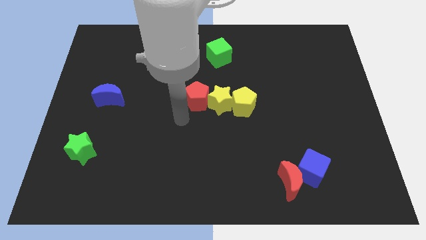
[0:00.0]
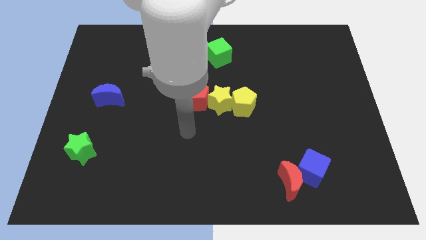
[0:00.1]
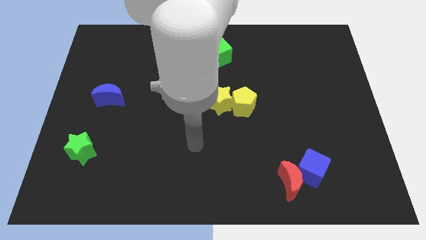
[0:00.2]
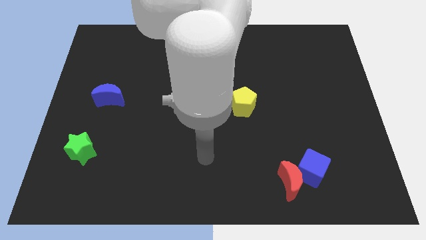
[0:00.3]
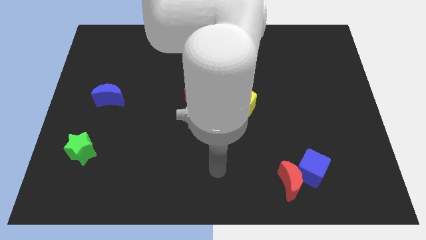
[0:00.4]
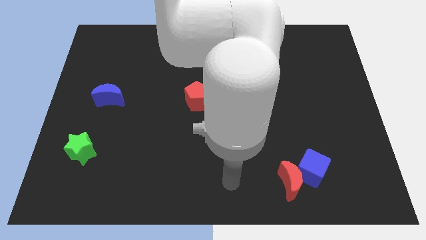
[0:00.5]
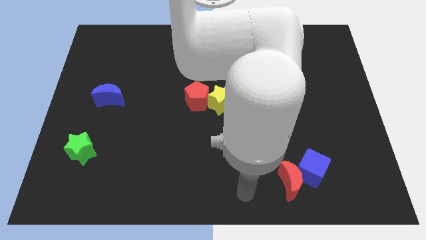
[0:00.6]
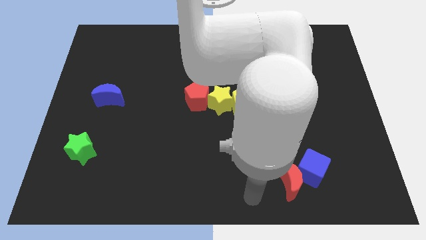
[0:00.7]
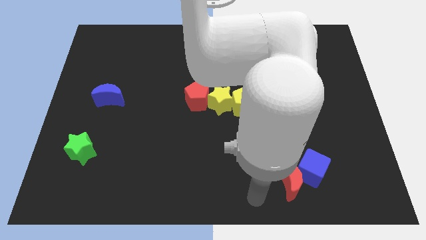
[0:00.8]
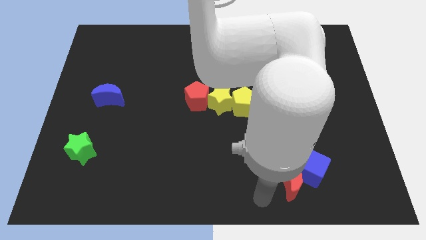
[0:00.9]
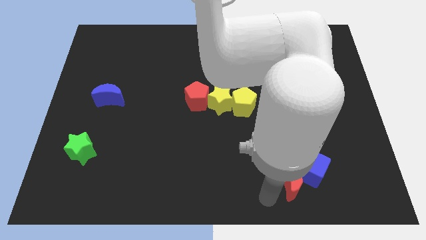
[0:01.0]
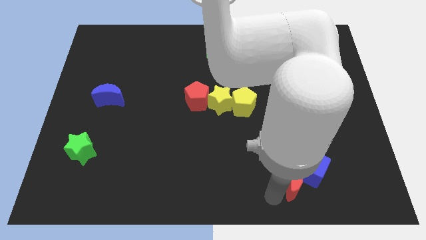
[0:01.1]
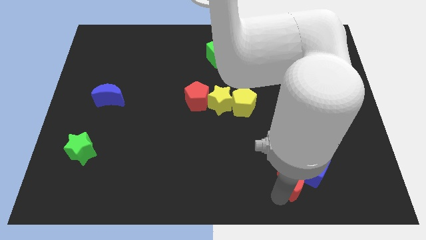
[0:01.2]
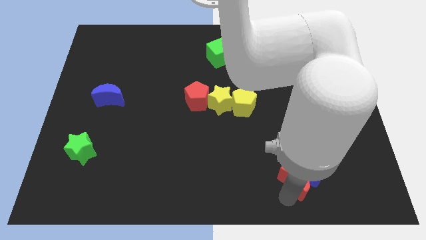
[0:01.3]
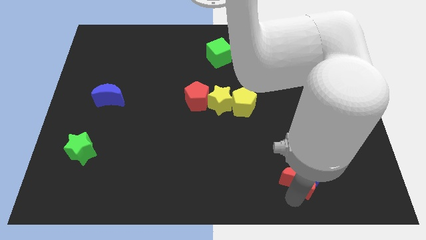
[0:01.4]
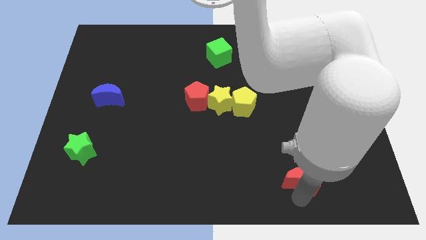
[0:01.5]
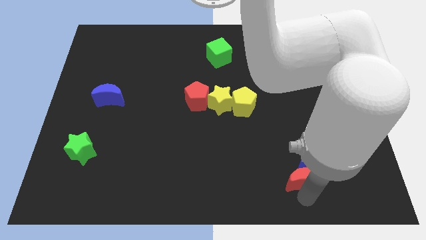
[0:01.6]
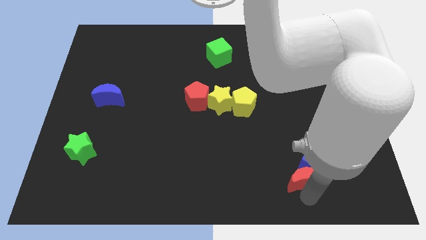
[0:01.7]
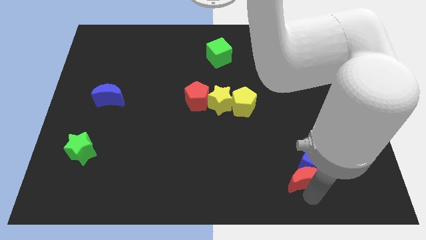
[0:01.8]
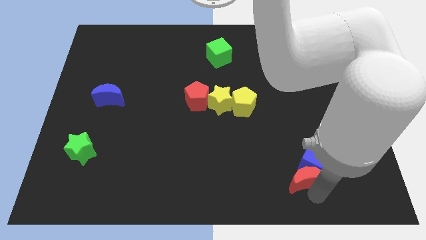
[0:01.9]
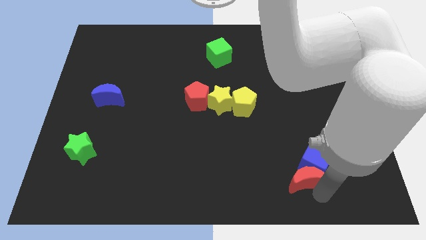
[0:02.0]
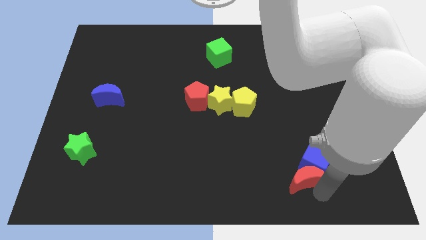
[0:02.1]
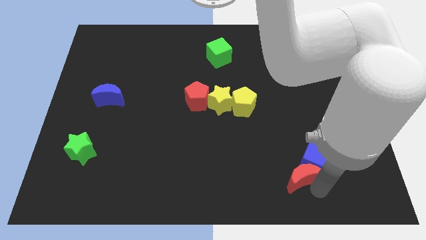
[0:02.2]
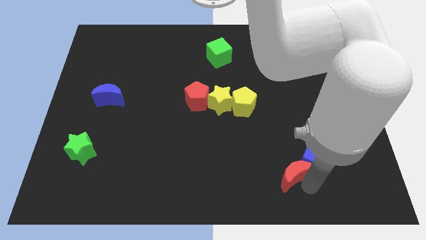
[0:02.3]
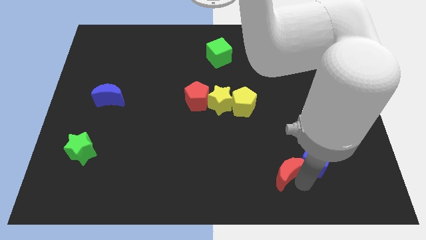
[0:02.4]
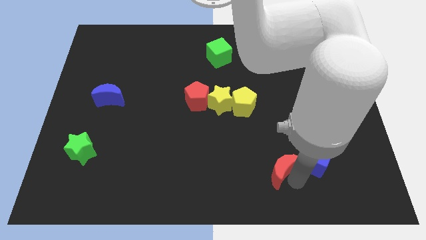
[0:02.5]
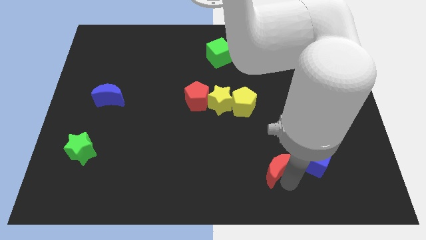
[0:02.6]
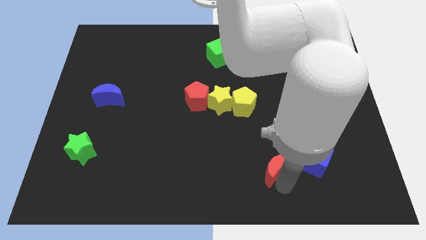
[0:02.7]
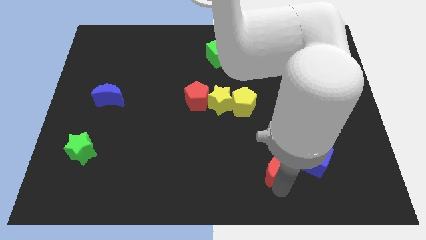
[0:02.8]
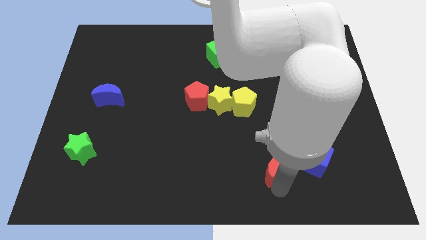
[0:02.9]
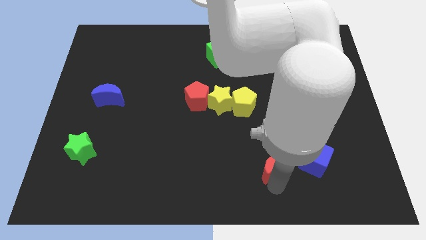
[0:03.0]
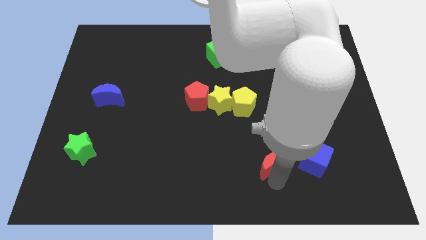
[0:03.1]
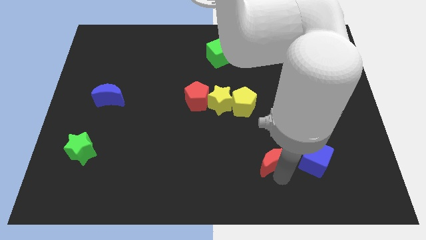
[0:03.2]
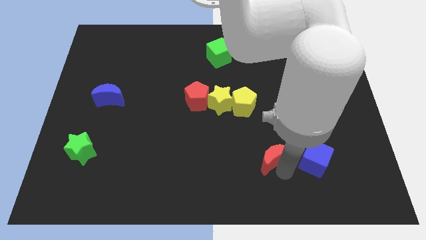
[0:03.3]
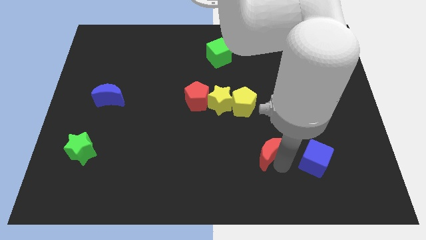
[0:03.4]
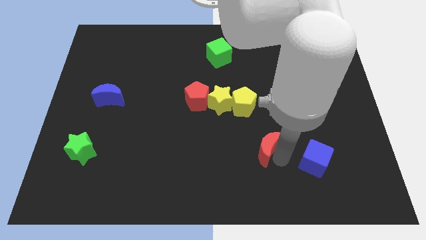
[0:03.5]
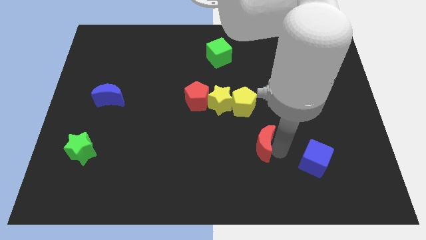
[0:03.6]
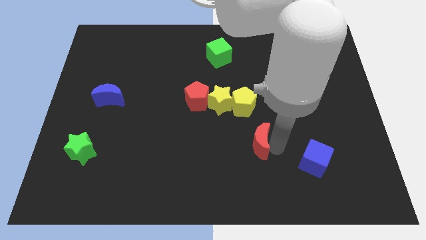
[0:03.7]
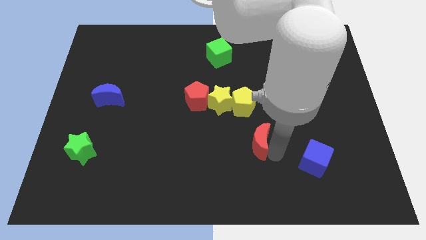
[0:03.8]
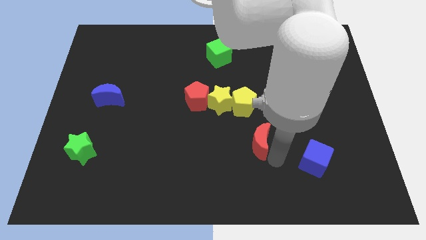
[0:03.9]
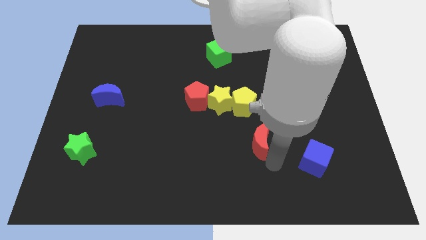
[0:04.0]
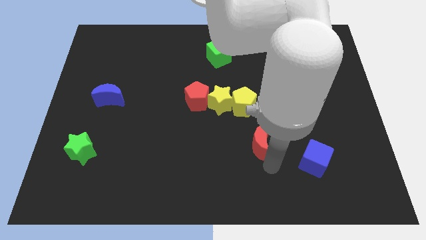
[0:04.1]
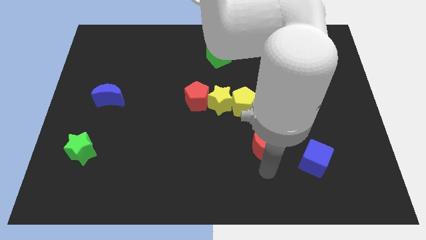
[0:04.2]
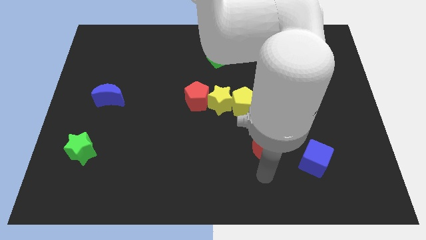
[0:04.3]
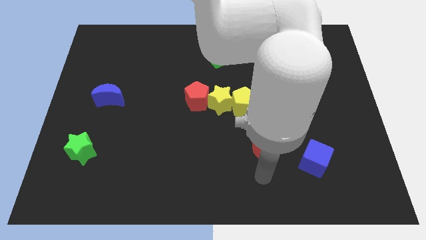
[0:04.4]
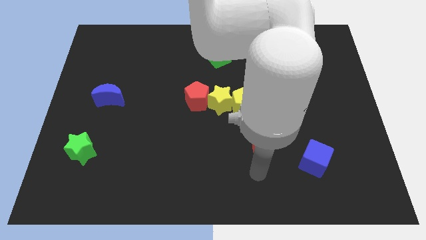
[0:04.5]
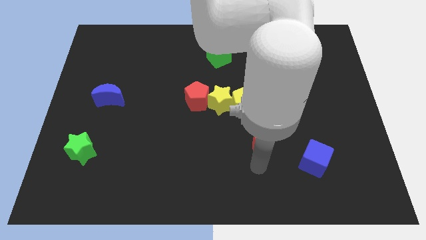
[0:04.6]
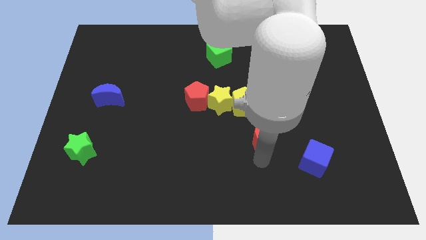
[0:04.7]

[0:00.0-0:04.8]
move red crescent towards the yellow pentagon

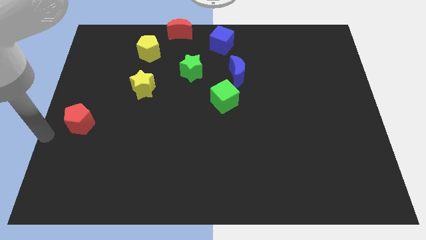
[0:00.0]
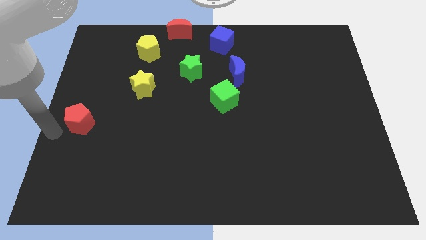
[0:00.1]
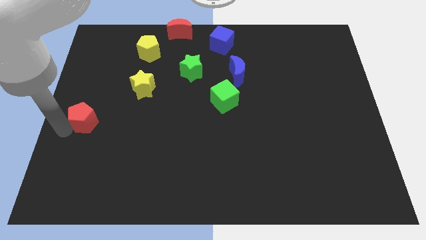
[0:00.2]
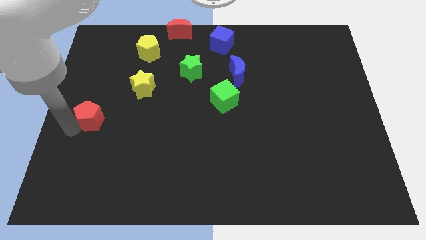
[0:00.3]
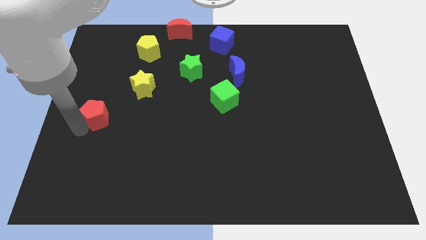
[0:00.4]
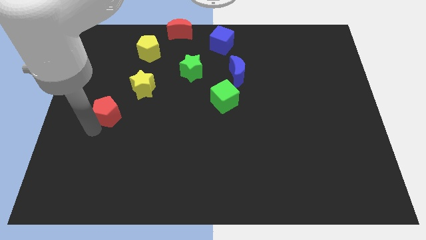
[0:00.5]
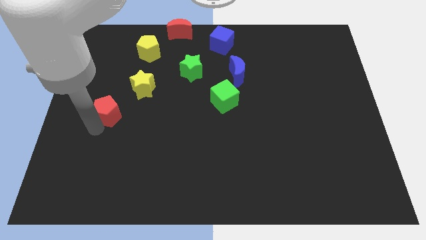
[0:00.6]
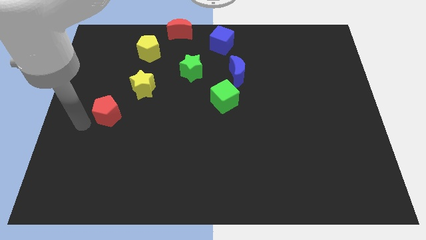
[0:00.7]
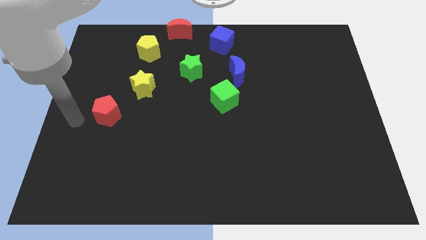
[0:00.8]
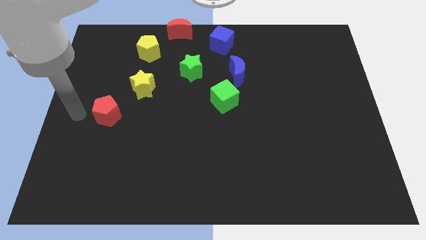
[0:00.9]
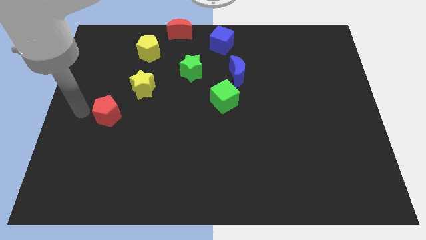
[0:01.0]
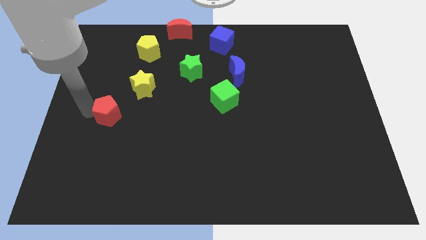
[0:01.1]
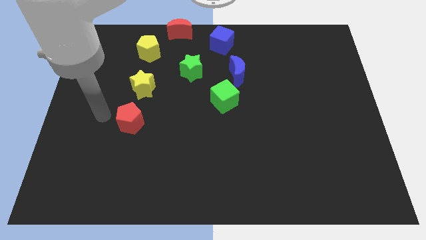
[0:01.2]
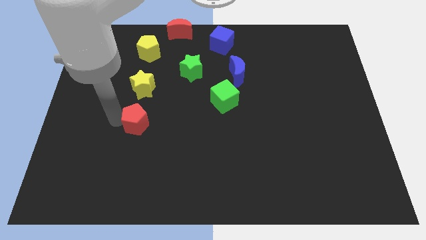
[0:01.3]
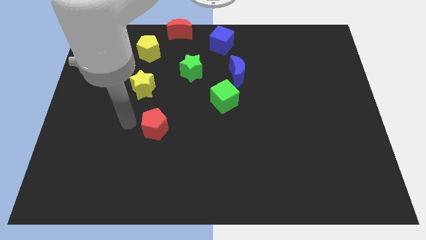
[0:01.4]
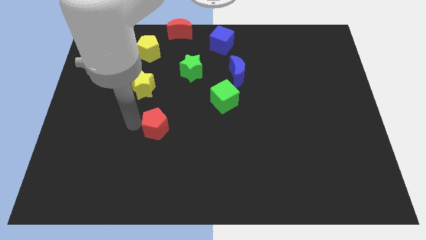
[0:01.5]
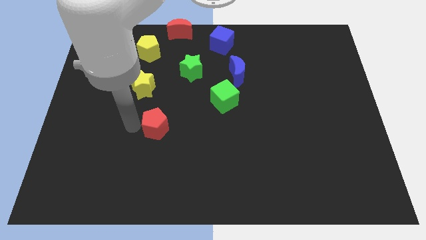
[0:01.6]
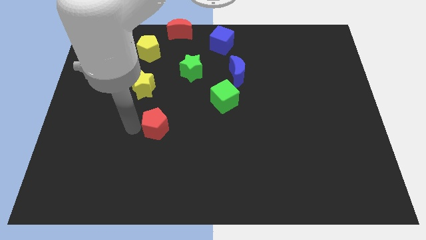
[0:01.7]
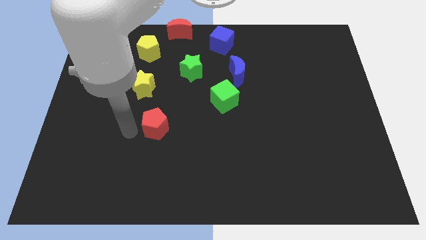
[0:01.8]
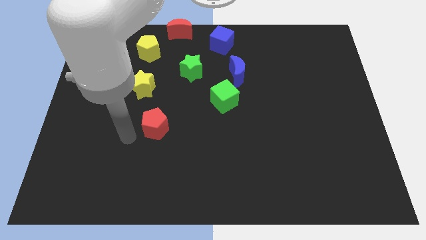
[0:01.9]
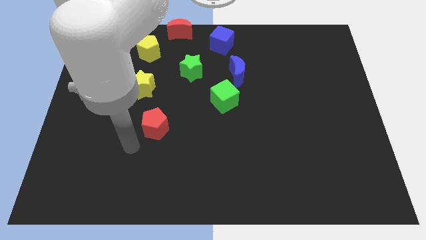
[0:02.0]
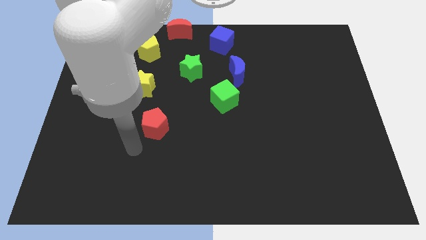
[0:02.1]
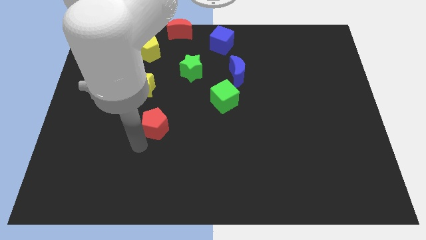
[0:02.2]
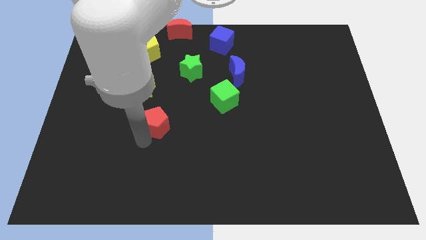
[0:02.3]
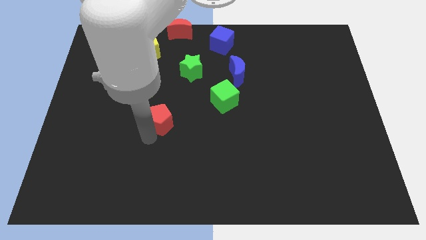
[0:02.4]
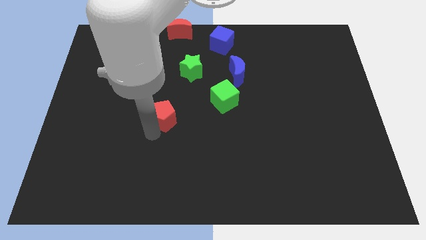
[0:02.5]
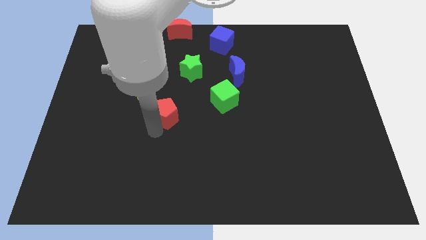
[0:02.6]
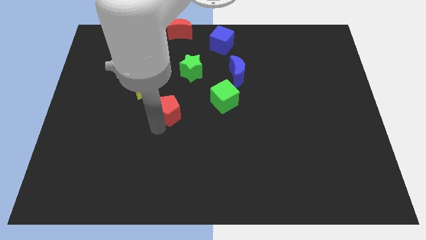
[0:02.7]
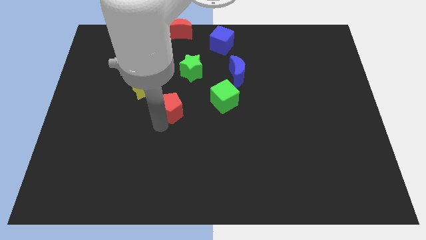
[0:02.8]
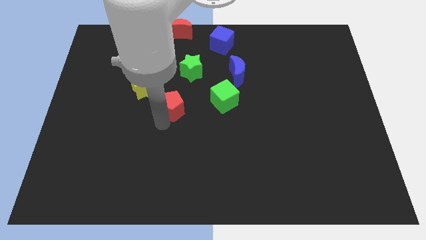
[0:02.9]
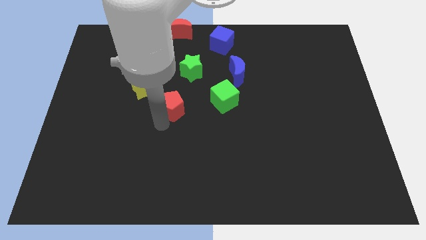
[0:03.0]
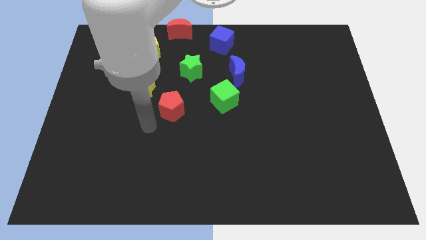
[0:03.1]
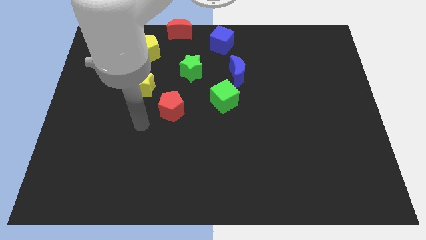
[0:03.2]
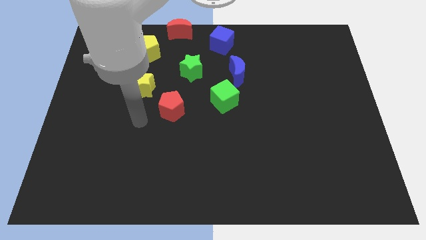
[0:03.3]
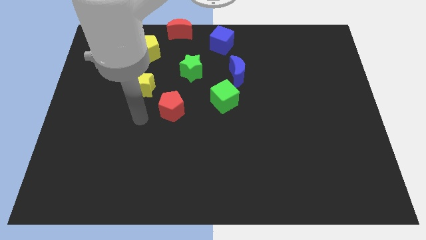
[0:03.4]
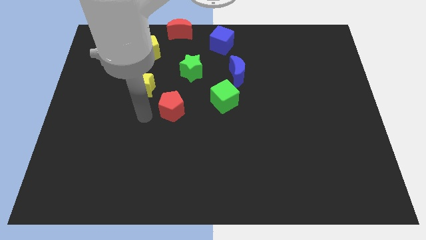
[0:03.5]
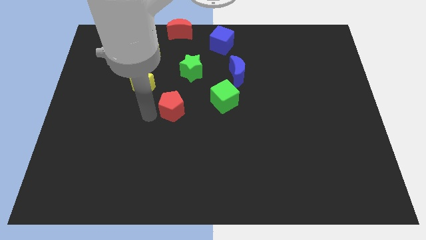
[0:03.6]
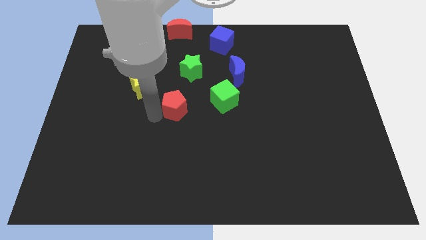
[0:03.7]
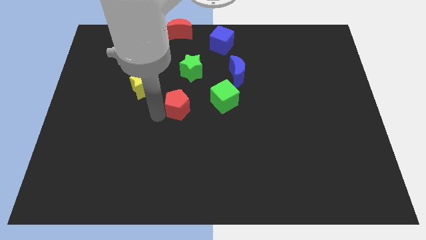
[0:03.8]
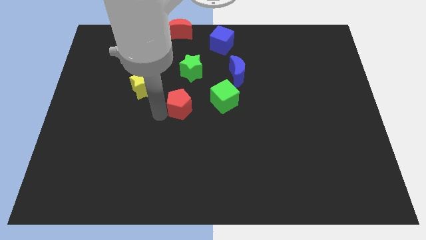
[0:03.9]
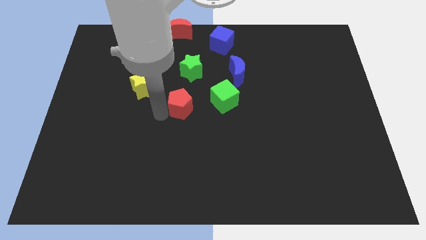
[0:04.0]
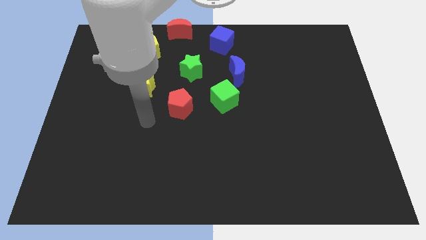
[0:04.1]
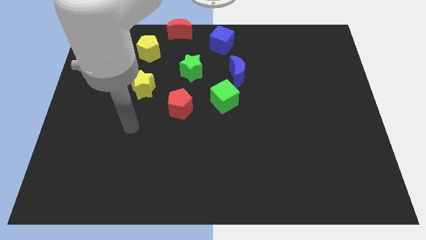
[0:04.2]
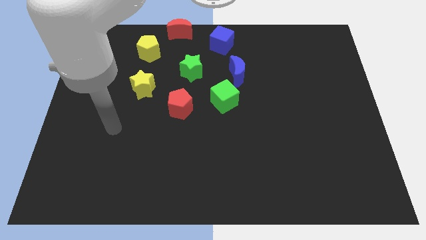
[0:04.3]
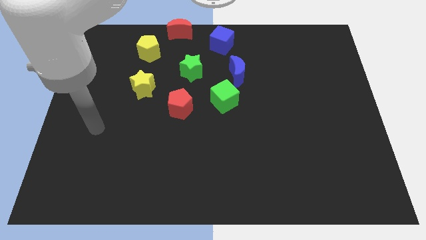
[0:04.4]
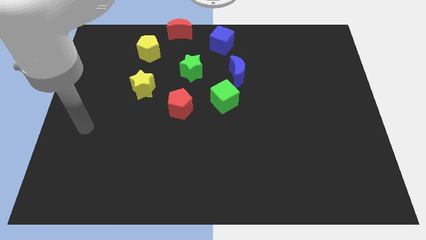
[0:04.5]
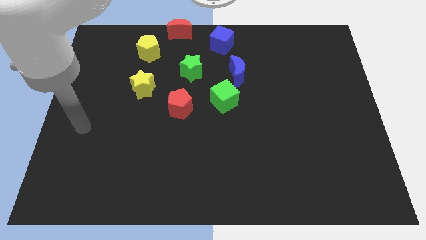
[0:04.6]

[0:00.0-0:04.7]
move the red pentagon left to the green cube
